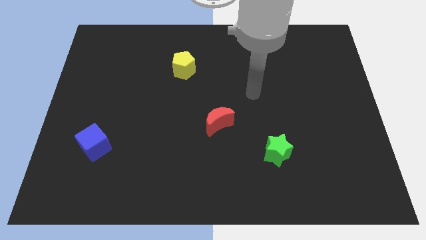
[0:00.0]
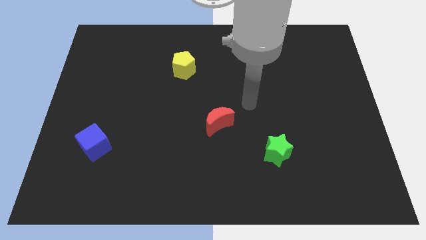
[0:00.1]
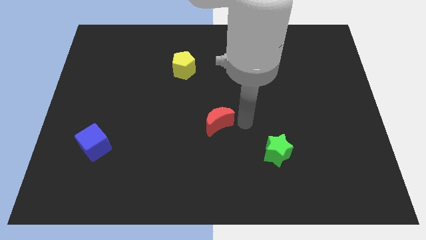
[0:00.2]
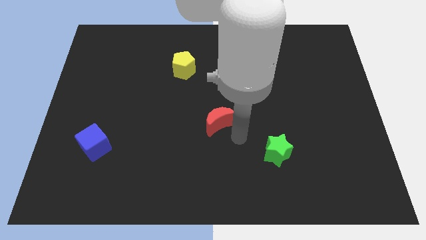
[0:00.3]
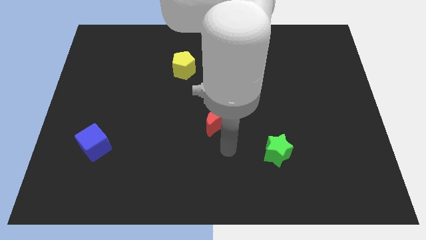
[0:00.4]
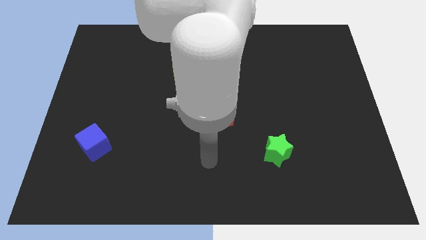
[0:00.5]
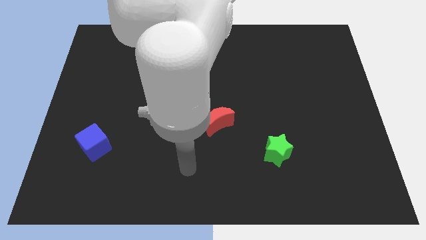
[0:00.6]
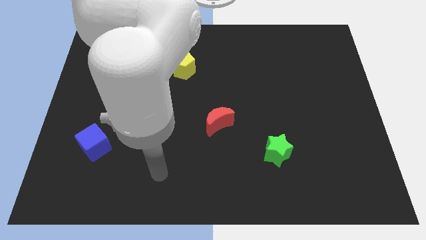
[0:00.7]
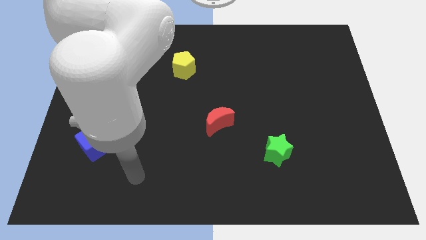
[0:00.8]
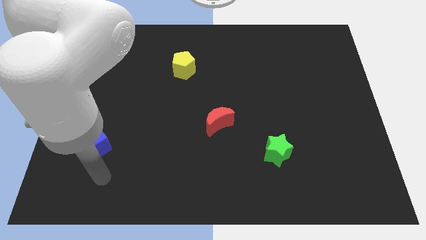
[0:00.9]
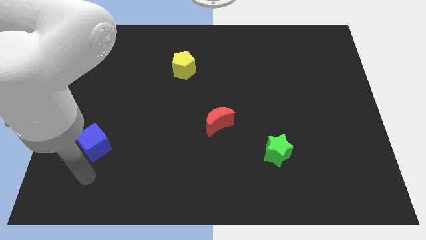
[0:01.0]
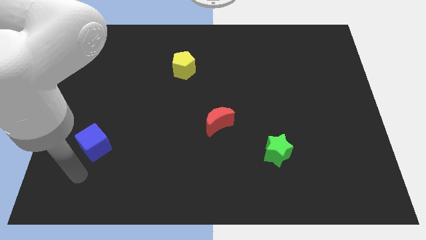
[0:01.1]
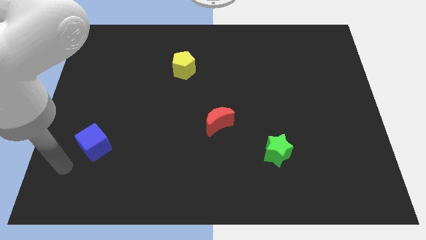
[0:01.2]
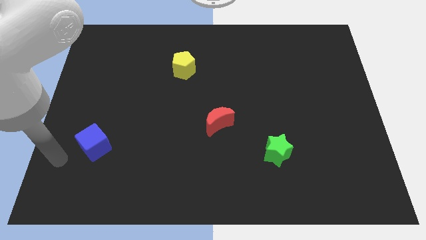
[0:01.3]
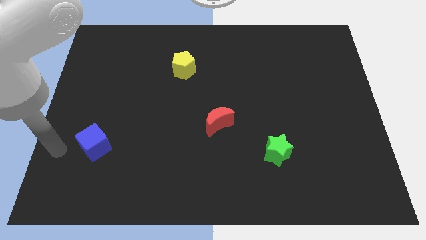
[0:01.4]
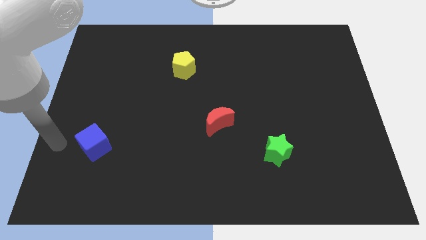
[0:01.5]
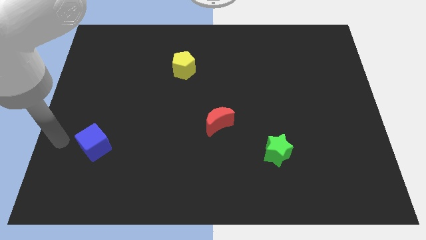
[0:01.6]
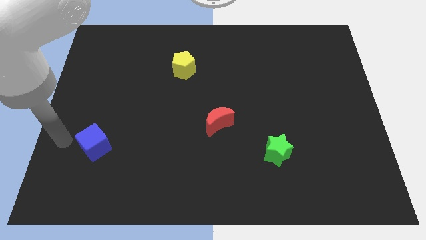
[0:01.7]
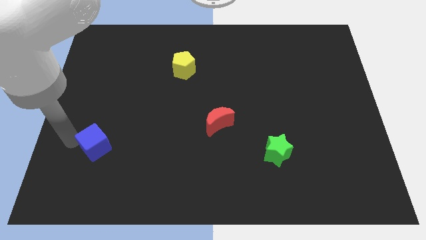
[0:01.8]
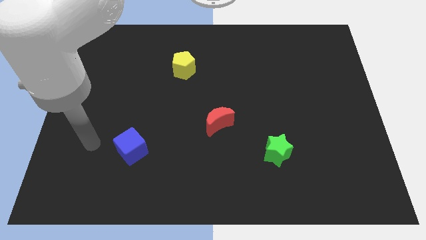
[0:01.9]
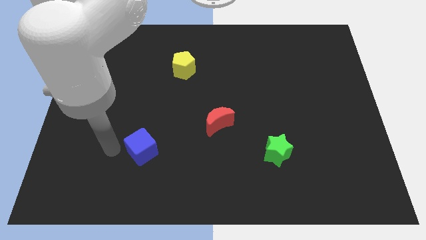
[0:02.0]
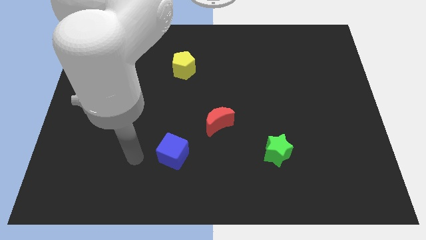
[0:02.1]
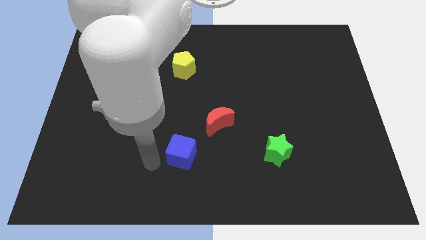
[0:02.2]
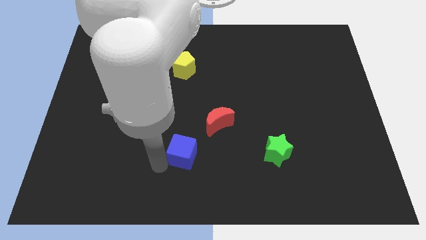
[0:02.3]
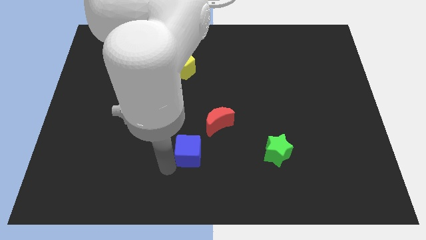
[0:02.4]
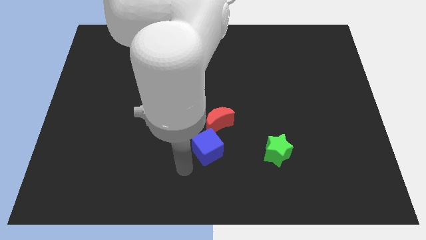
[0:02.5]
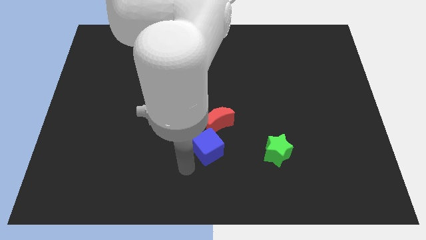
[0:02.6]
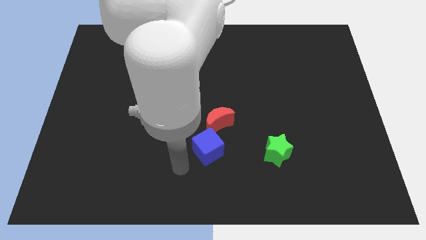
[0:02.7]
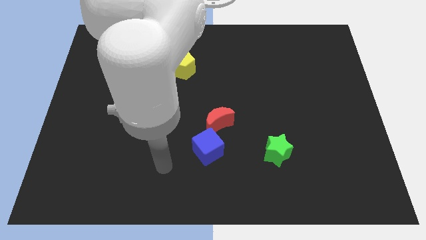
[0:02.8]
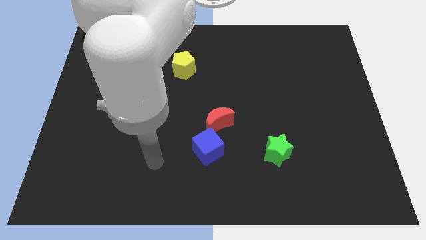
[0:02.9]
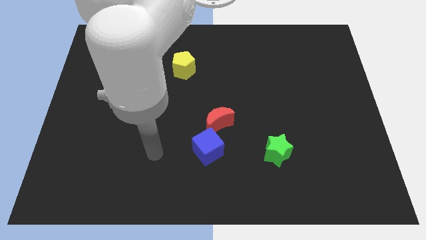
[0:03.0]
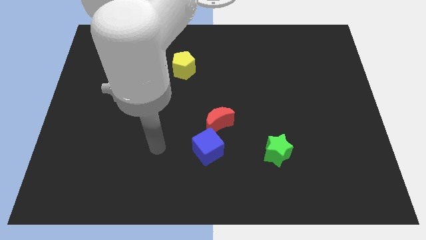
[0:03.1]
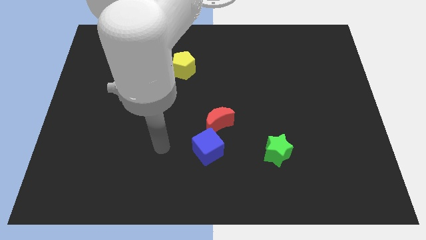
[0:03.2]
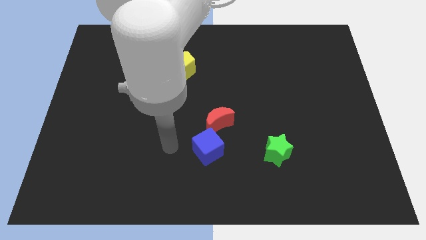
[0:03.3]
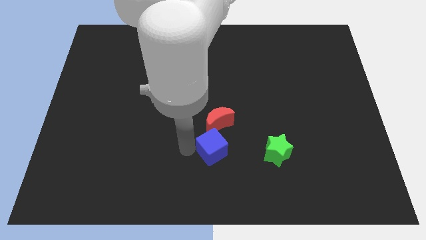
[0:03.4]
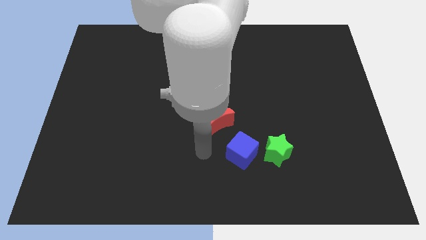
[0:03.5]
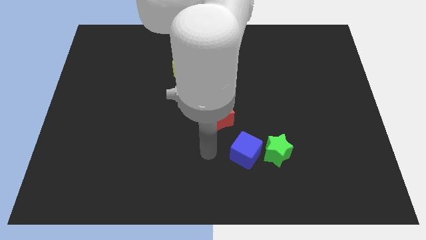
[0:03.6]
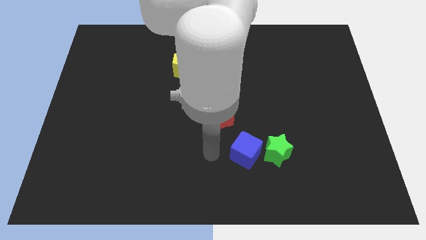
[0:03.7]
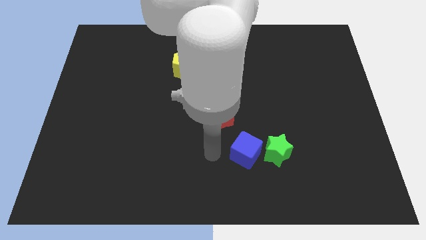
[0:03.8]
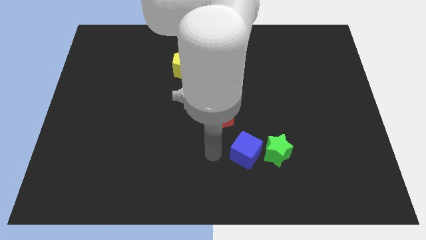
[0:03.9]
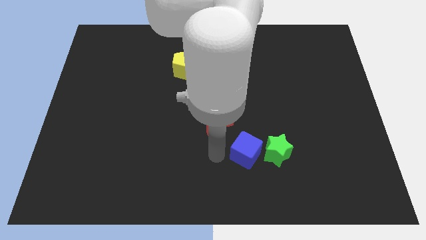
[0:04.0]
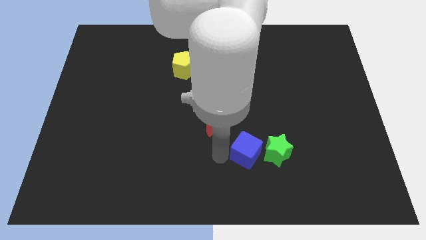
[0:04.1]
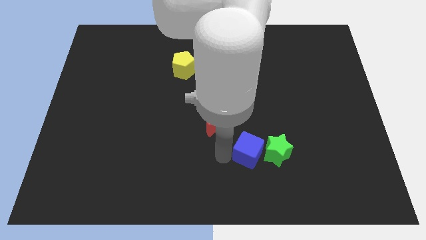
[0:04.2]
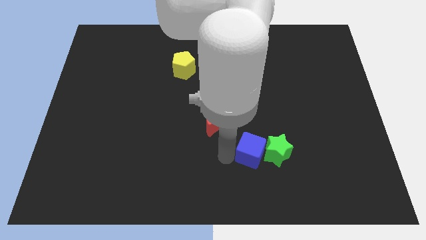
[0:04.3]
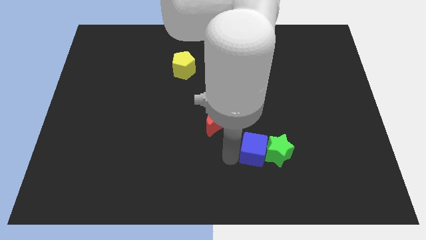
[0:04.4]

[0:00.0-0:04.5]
push the blue block to the green star

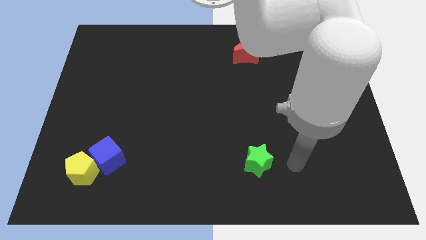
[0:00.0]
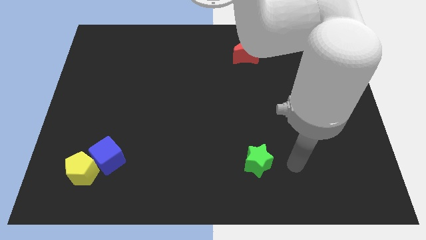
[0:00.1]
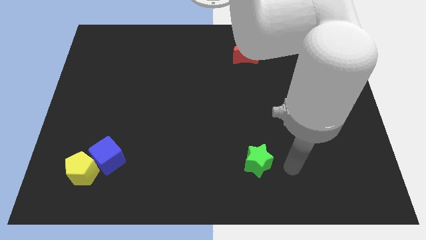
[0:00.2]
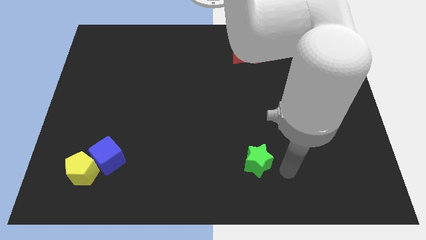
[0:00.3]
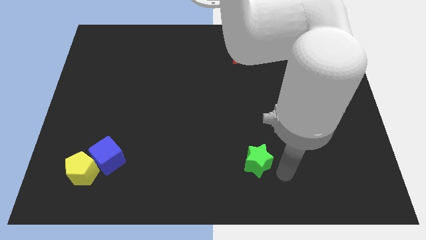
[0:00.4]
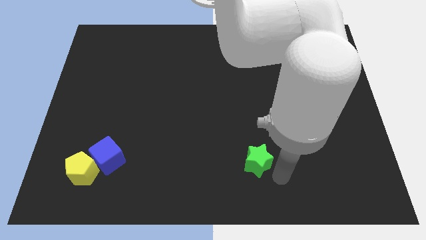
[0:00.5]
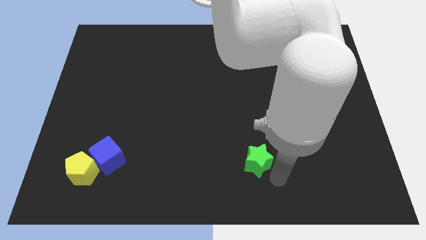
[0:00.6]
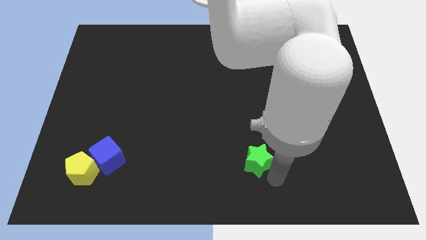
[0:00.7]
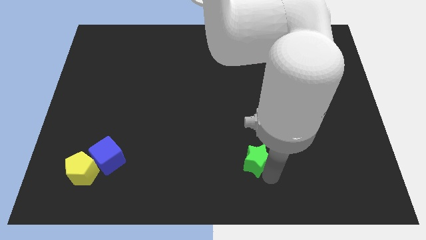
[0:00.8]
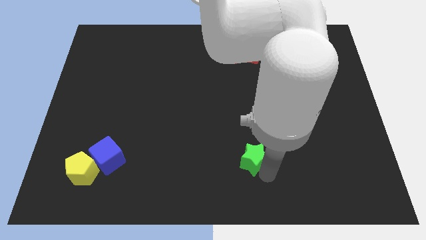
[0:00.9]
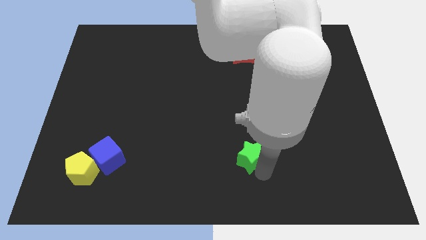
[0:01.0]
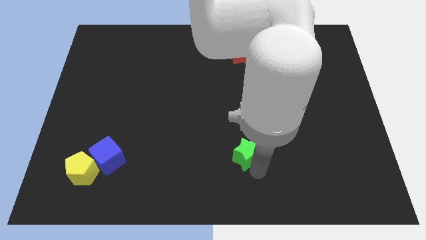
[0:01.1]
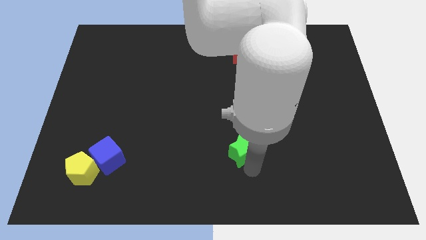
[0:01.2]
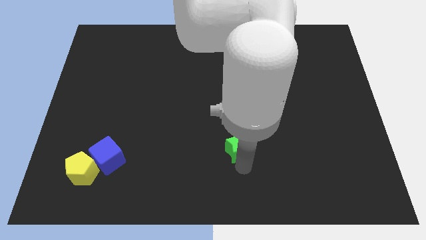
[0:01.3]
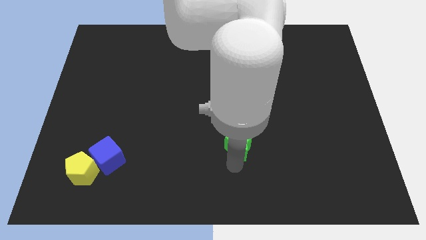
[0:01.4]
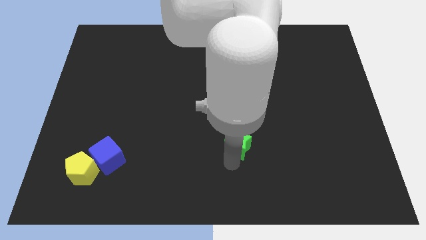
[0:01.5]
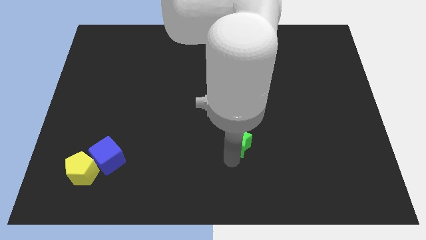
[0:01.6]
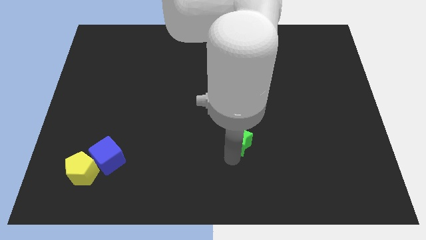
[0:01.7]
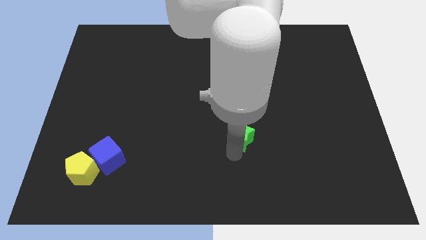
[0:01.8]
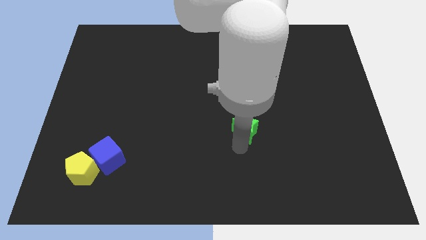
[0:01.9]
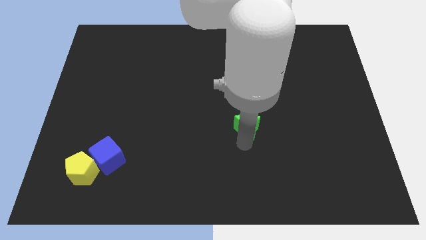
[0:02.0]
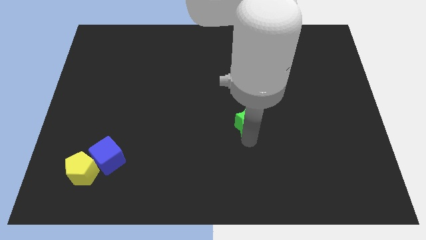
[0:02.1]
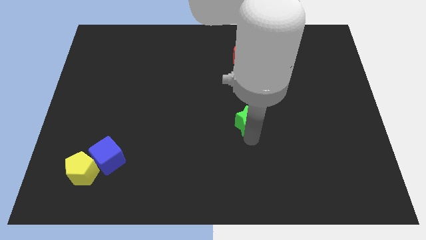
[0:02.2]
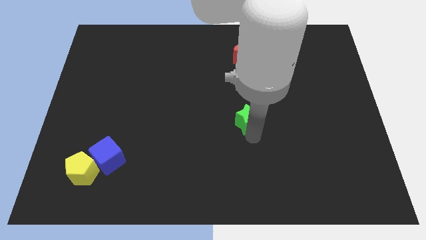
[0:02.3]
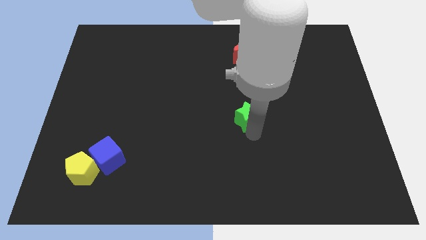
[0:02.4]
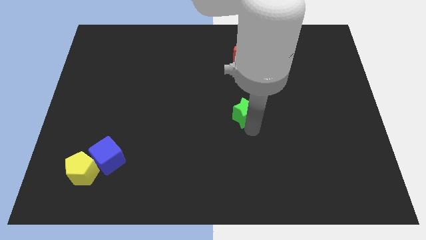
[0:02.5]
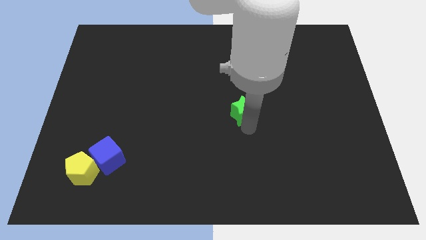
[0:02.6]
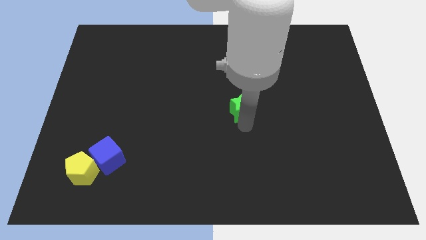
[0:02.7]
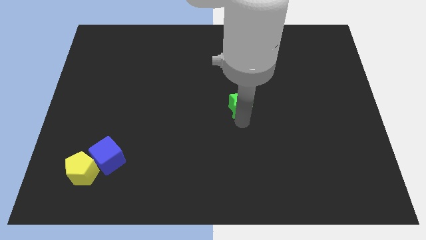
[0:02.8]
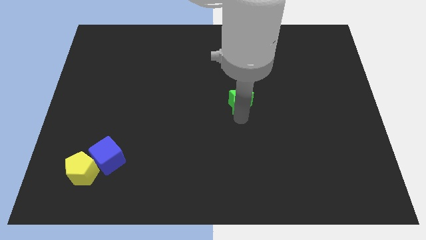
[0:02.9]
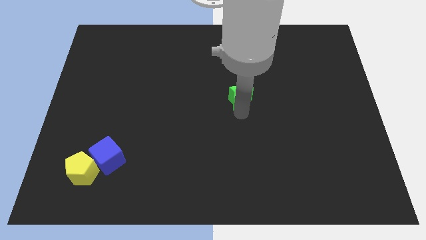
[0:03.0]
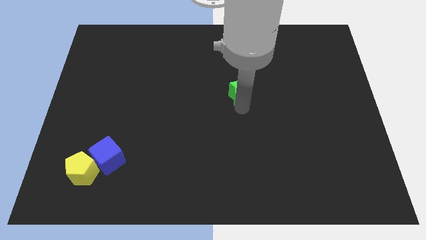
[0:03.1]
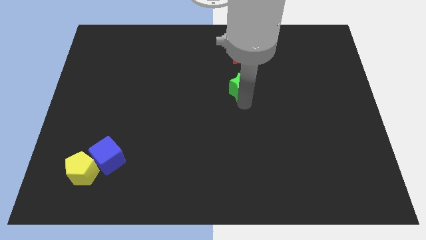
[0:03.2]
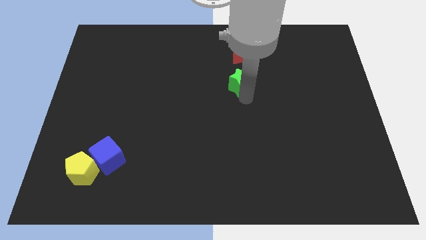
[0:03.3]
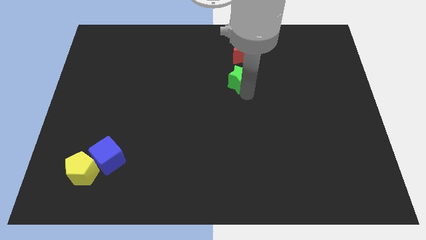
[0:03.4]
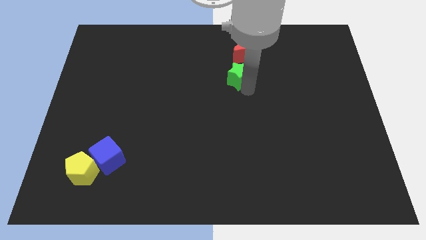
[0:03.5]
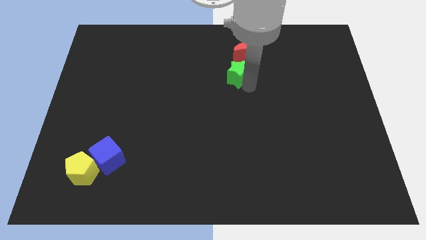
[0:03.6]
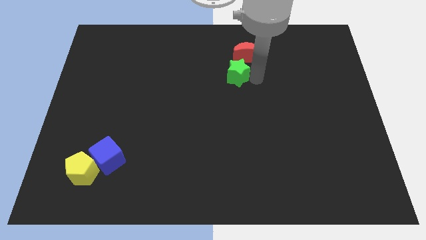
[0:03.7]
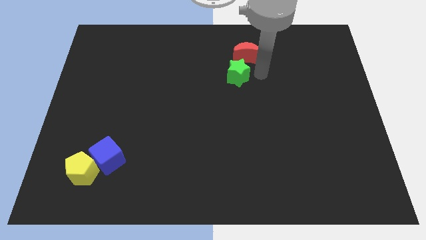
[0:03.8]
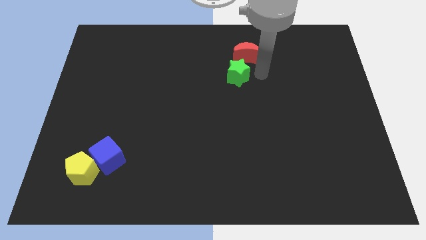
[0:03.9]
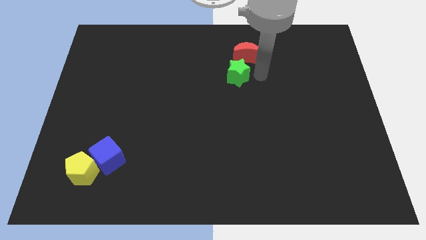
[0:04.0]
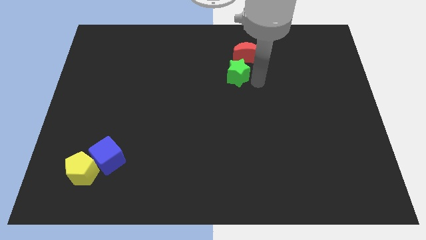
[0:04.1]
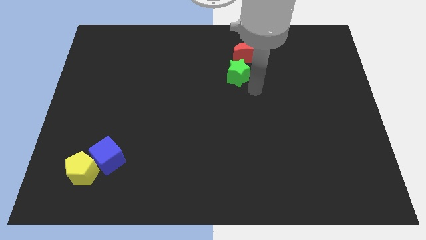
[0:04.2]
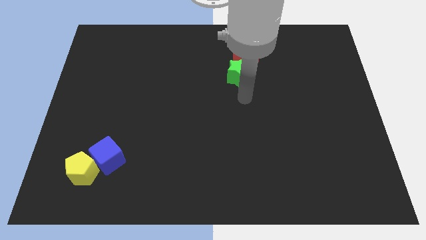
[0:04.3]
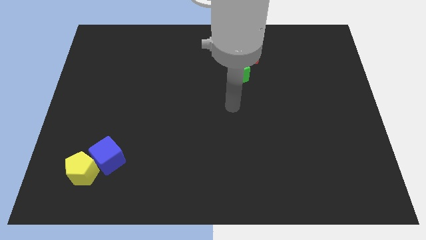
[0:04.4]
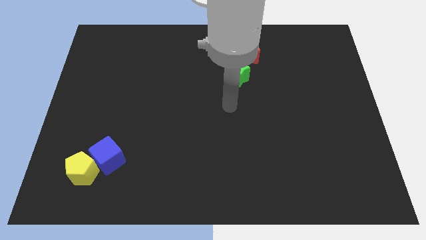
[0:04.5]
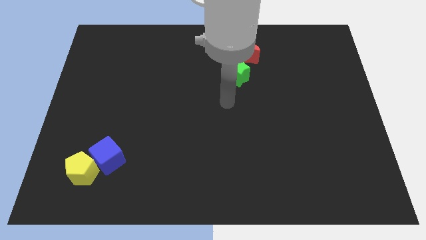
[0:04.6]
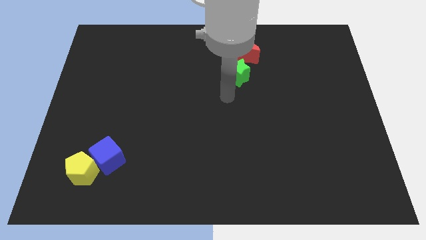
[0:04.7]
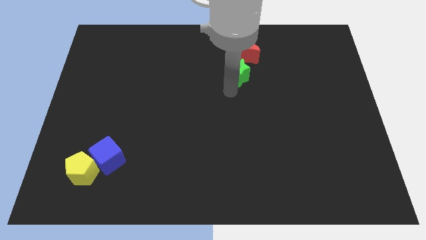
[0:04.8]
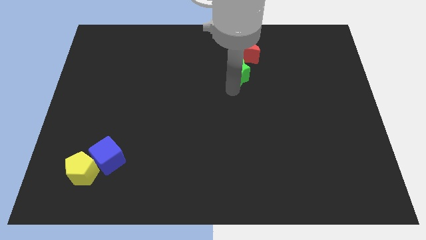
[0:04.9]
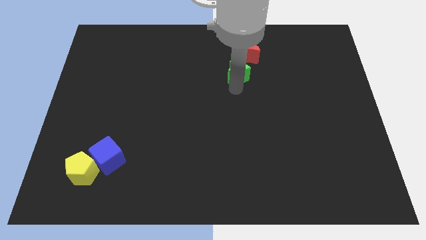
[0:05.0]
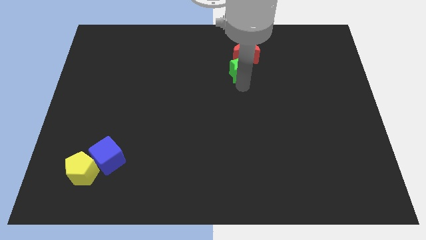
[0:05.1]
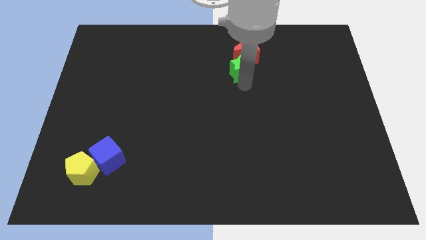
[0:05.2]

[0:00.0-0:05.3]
move the green block close to the moon
